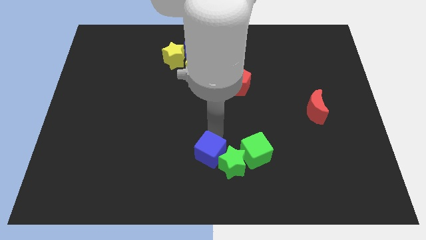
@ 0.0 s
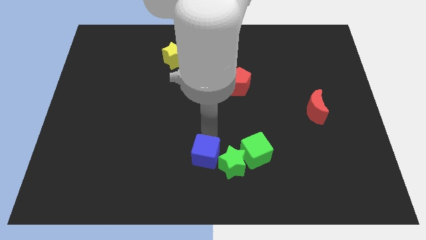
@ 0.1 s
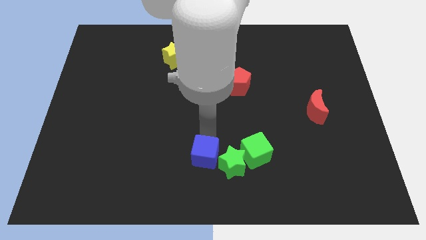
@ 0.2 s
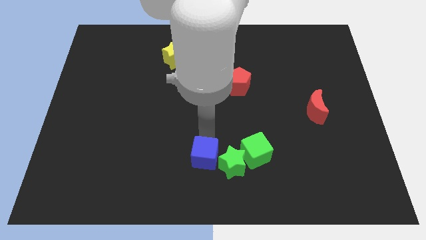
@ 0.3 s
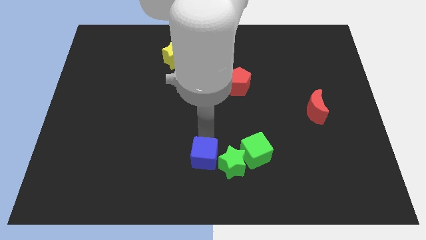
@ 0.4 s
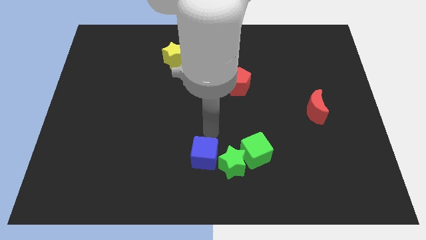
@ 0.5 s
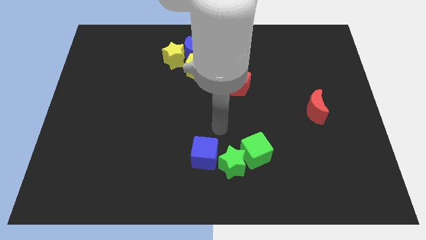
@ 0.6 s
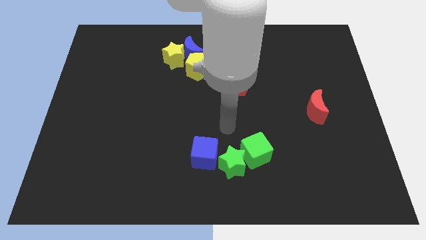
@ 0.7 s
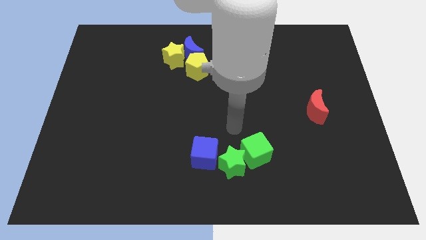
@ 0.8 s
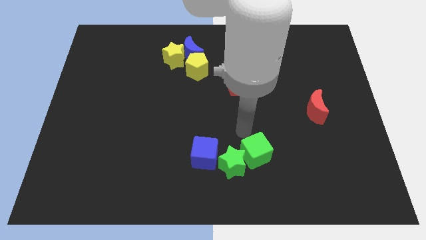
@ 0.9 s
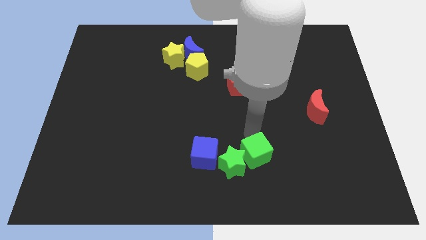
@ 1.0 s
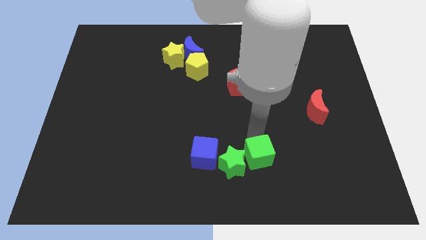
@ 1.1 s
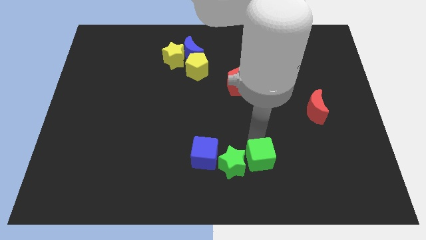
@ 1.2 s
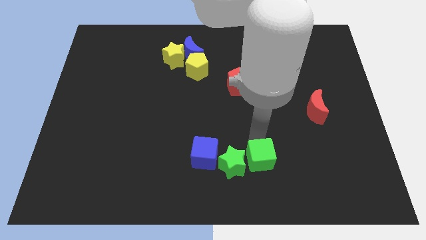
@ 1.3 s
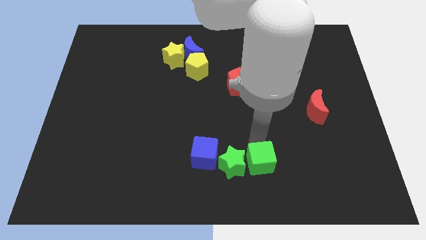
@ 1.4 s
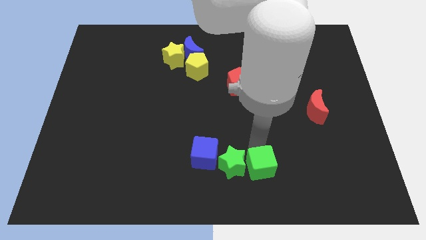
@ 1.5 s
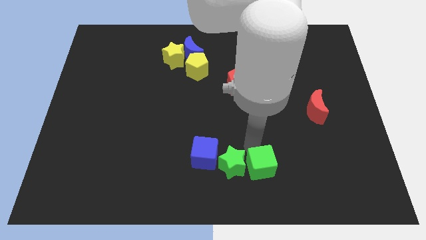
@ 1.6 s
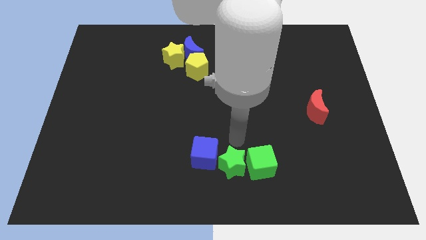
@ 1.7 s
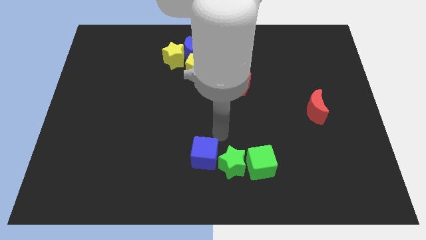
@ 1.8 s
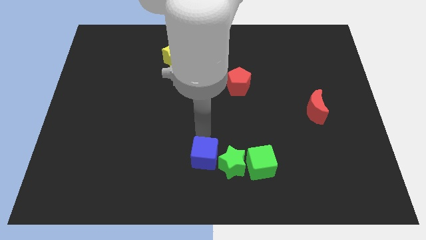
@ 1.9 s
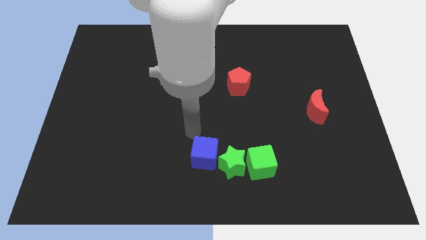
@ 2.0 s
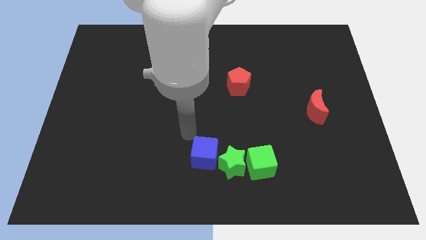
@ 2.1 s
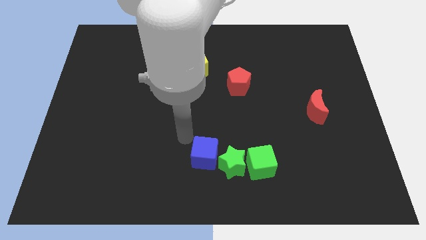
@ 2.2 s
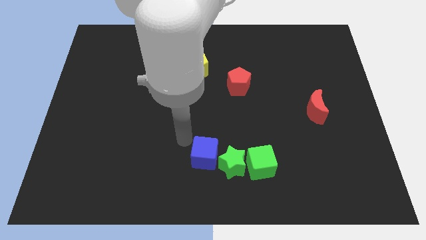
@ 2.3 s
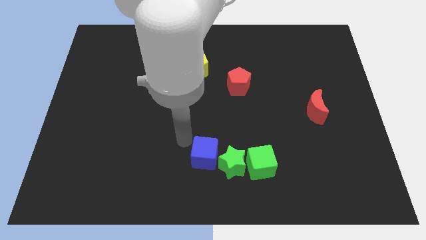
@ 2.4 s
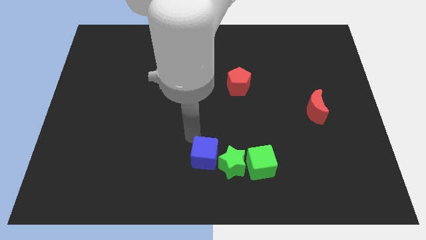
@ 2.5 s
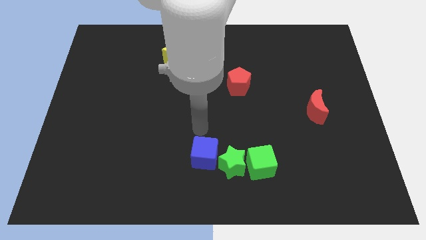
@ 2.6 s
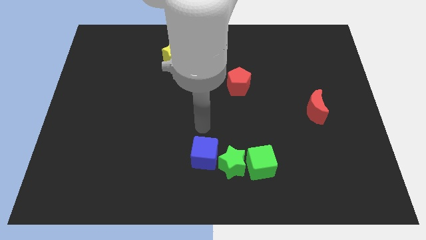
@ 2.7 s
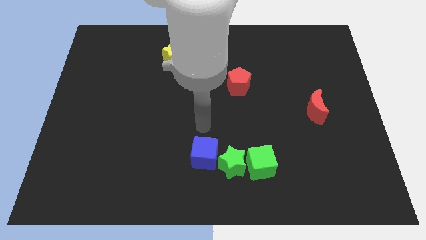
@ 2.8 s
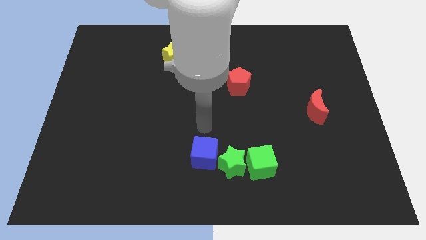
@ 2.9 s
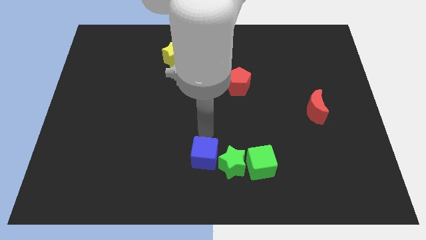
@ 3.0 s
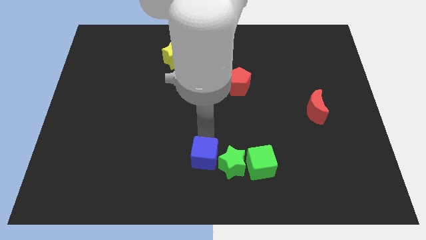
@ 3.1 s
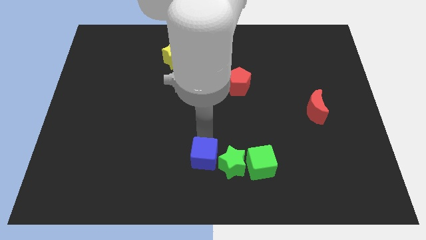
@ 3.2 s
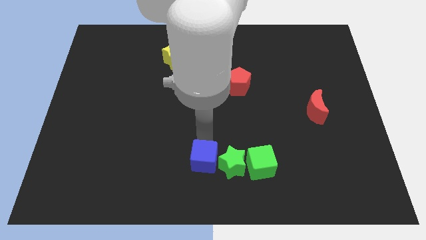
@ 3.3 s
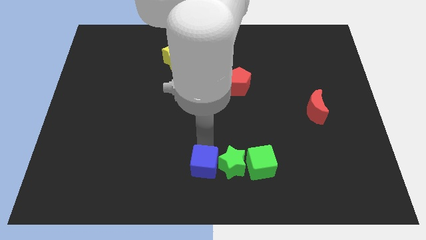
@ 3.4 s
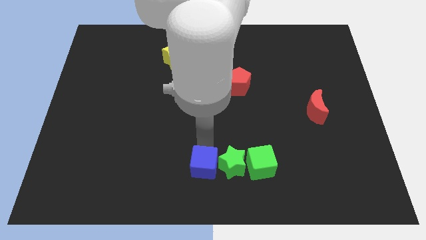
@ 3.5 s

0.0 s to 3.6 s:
adjust the green and blue cube slightly to the down to form a horizontal line of blocks

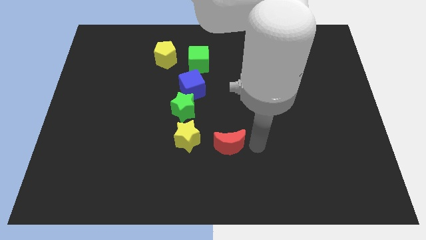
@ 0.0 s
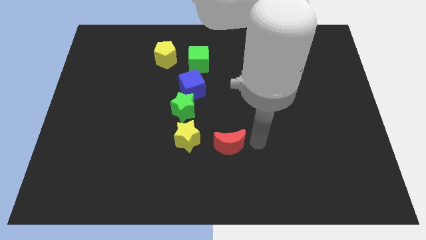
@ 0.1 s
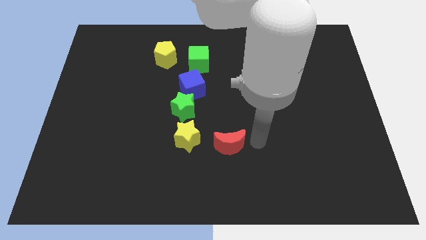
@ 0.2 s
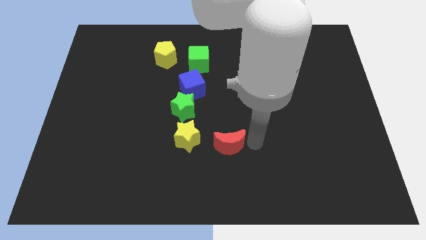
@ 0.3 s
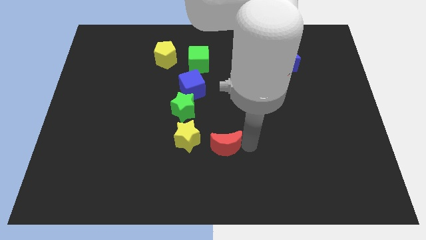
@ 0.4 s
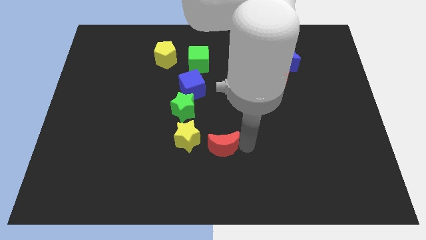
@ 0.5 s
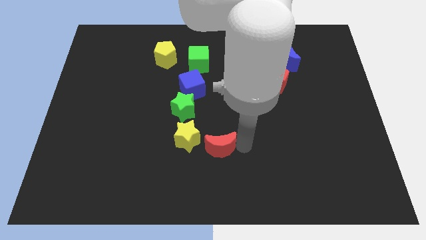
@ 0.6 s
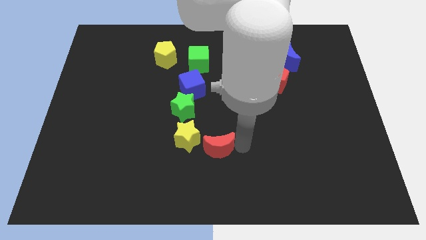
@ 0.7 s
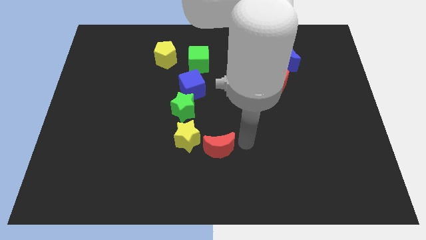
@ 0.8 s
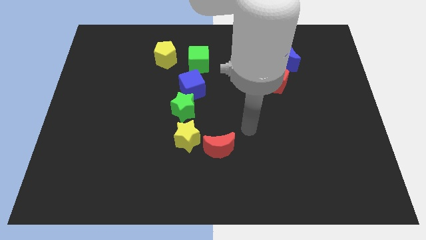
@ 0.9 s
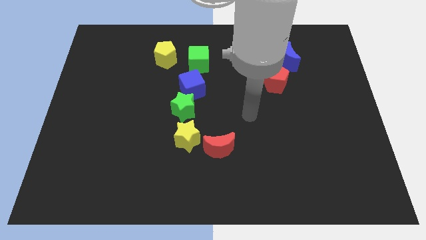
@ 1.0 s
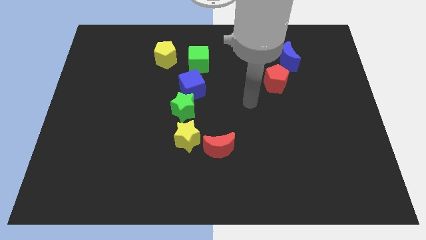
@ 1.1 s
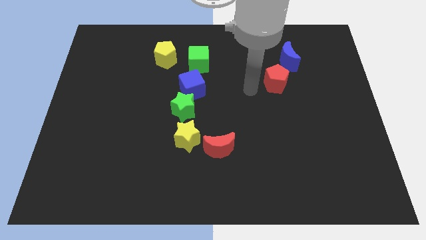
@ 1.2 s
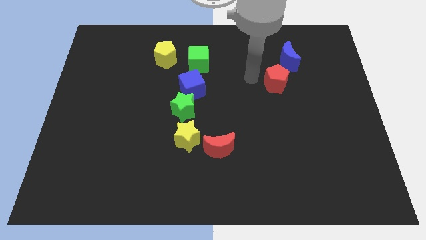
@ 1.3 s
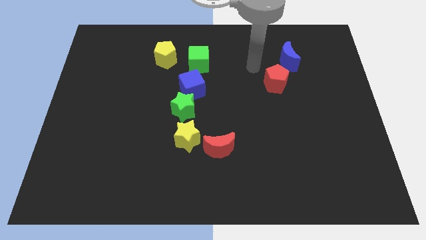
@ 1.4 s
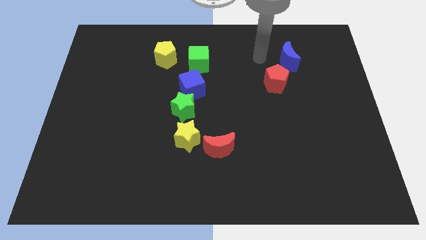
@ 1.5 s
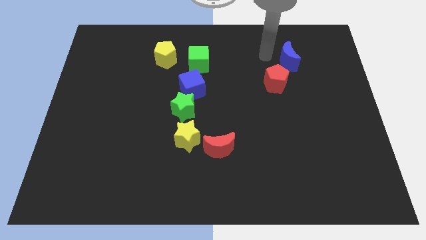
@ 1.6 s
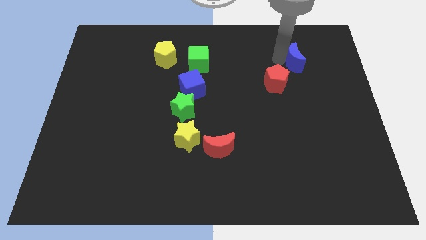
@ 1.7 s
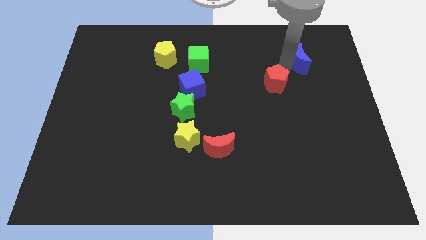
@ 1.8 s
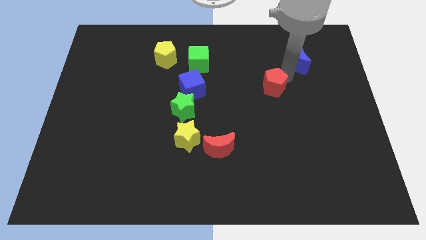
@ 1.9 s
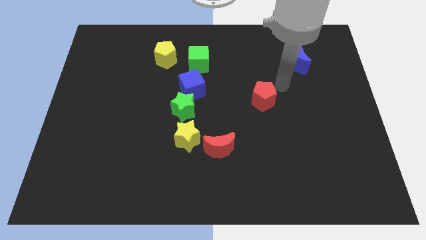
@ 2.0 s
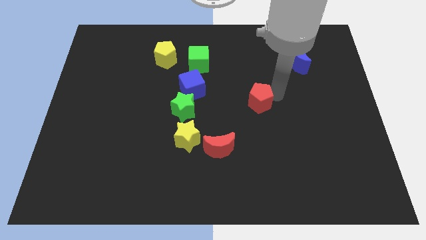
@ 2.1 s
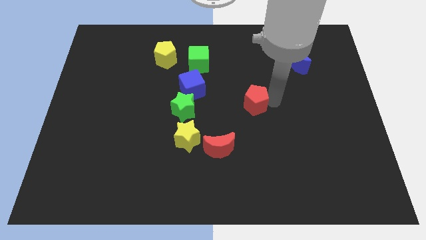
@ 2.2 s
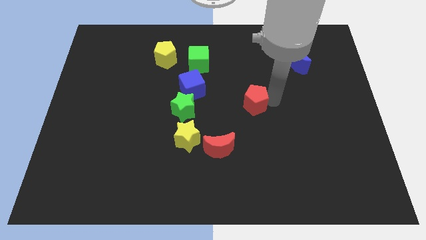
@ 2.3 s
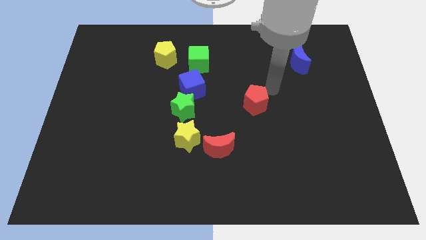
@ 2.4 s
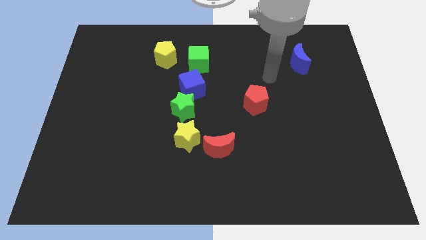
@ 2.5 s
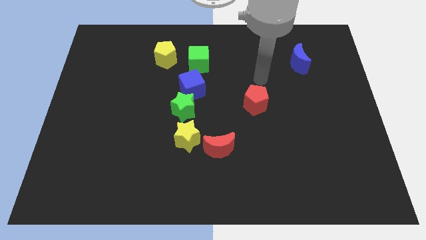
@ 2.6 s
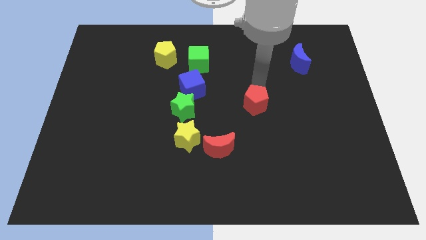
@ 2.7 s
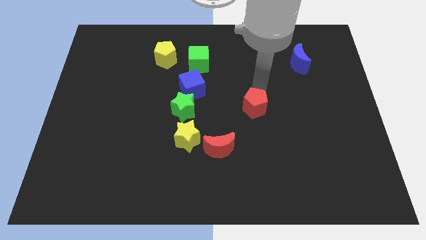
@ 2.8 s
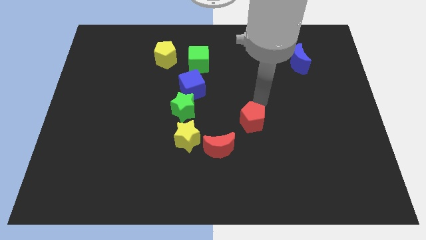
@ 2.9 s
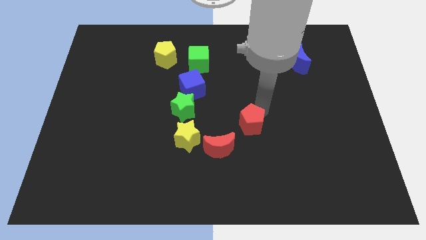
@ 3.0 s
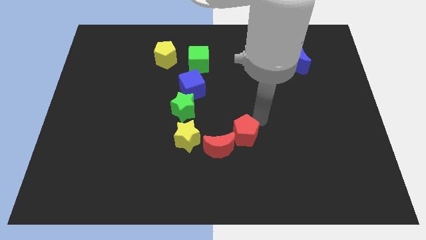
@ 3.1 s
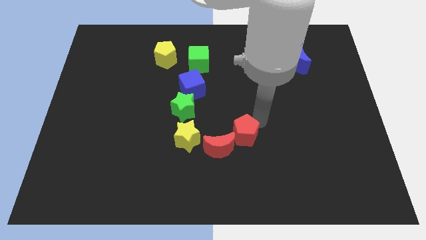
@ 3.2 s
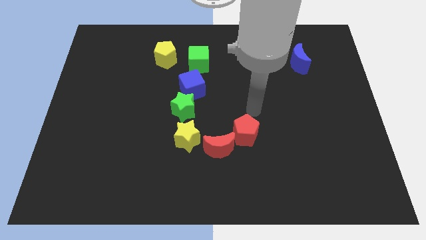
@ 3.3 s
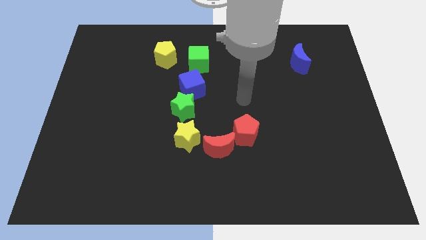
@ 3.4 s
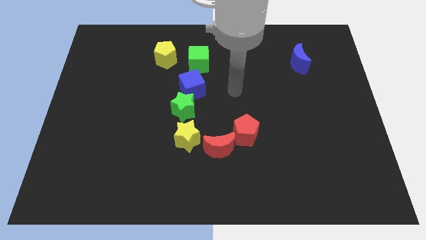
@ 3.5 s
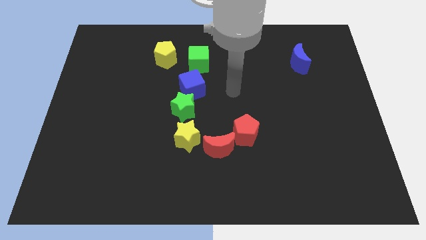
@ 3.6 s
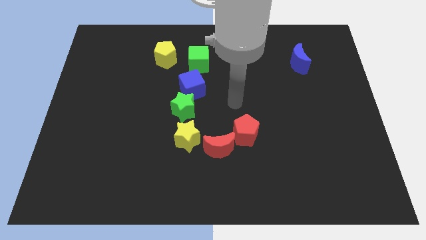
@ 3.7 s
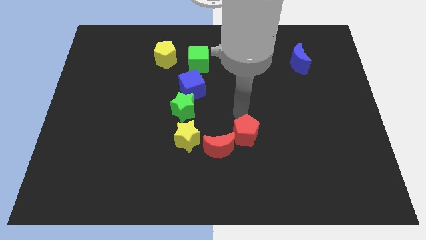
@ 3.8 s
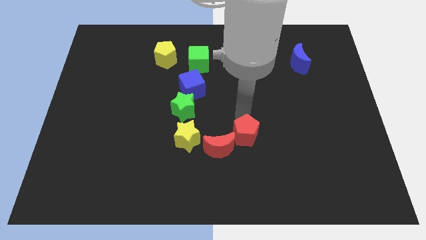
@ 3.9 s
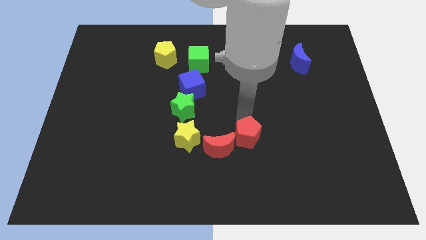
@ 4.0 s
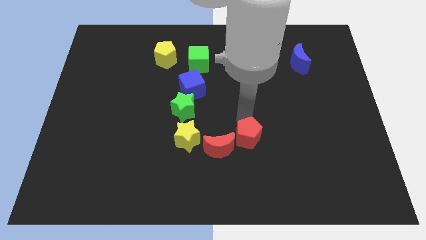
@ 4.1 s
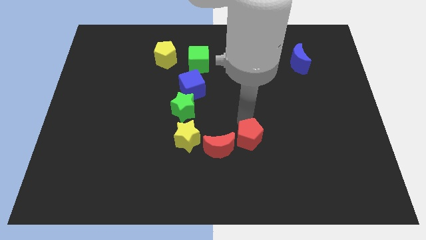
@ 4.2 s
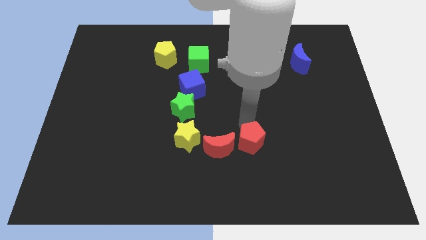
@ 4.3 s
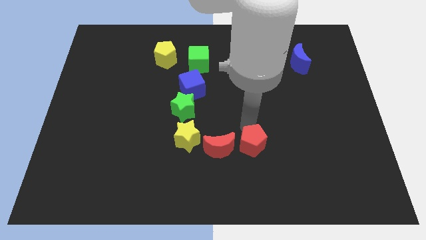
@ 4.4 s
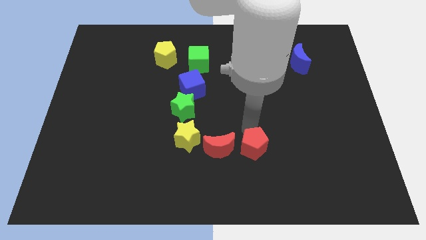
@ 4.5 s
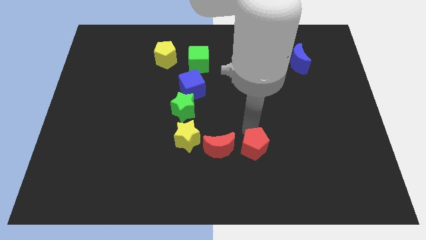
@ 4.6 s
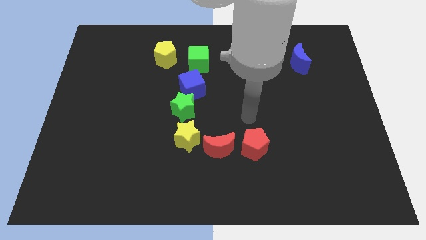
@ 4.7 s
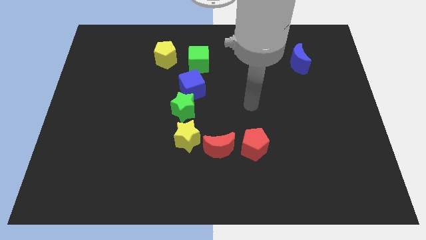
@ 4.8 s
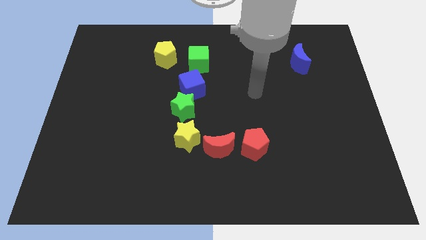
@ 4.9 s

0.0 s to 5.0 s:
place red pentagon to the right side of the red crescent

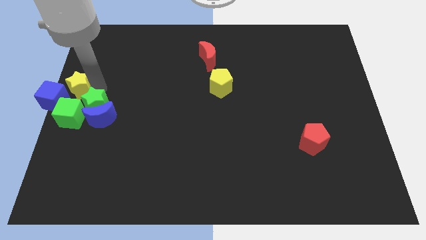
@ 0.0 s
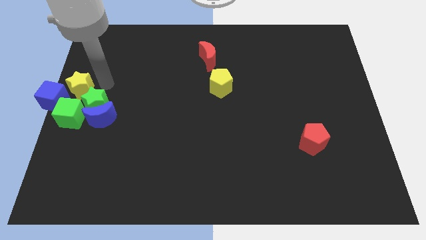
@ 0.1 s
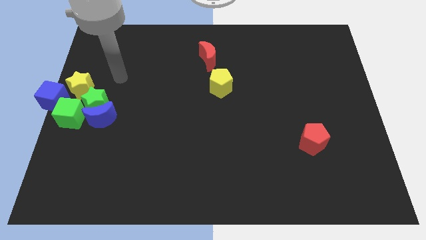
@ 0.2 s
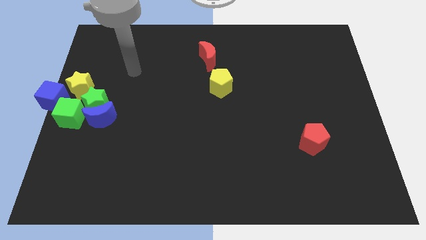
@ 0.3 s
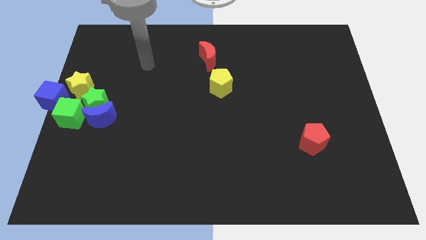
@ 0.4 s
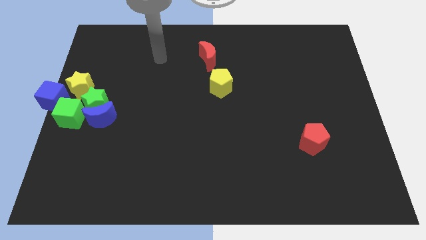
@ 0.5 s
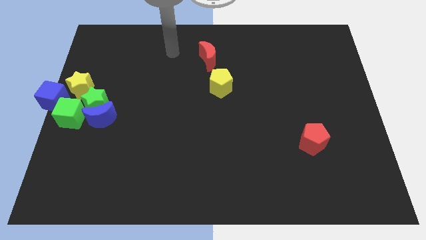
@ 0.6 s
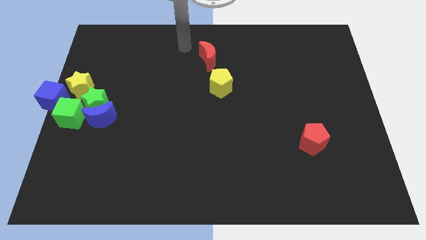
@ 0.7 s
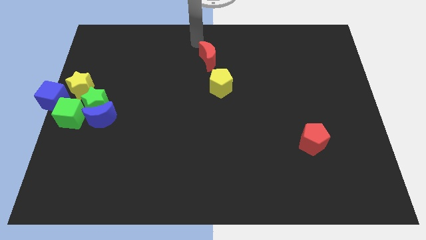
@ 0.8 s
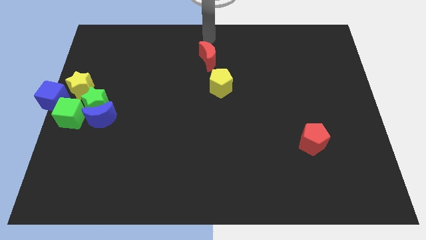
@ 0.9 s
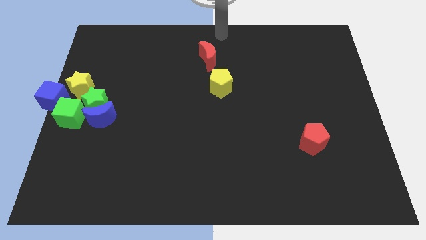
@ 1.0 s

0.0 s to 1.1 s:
go away from the group of blocks
